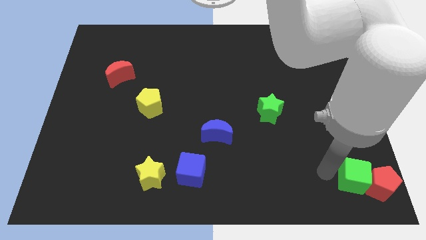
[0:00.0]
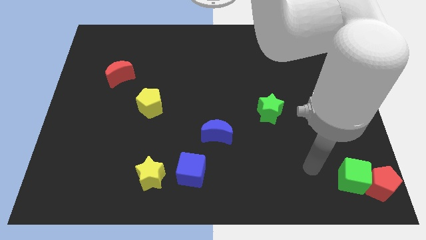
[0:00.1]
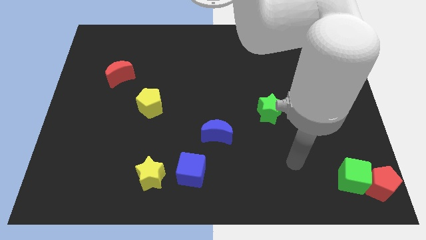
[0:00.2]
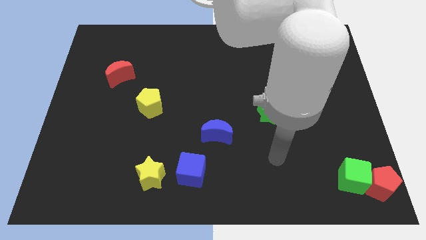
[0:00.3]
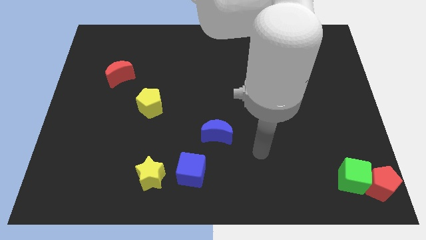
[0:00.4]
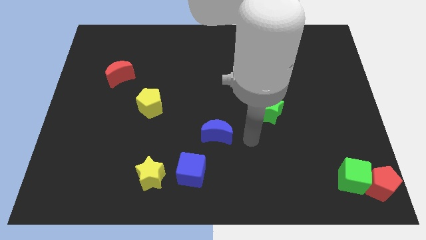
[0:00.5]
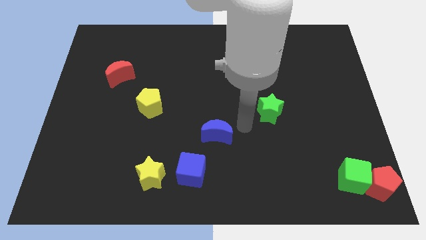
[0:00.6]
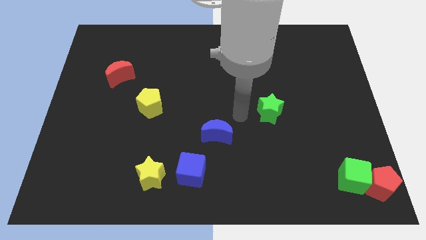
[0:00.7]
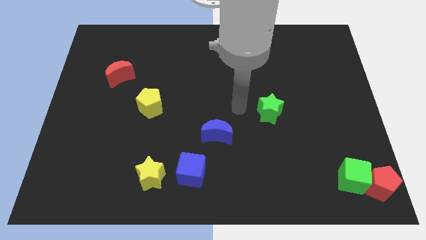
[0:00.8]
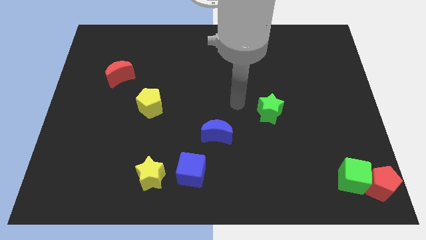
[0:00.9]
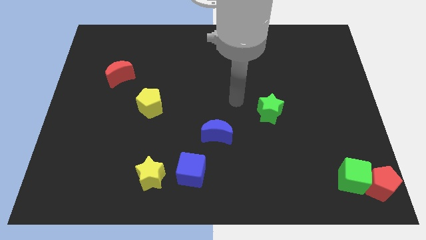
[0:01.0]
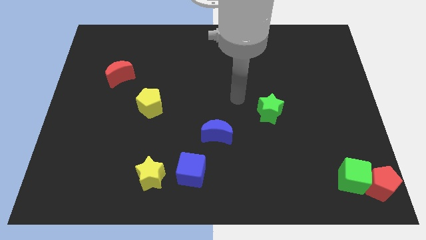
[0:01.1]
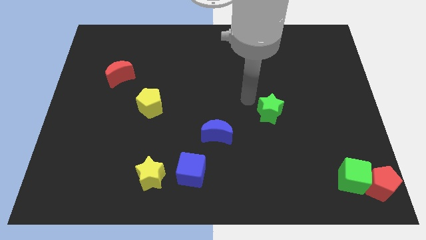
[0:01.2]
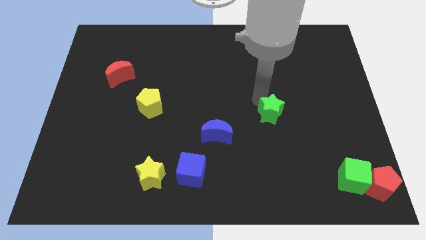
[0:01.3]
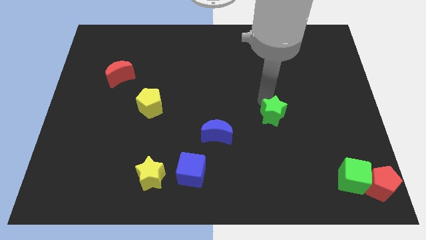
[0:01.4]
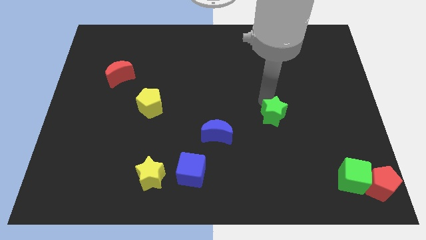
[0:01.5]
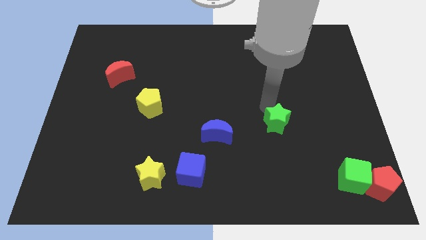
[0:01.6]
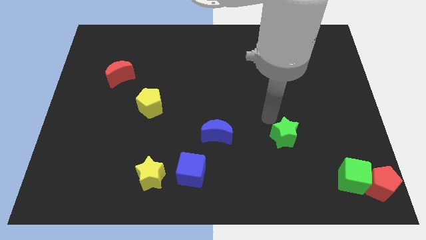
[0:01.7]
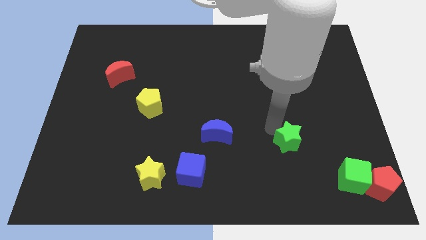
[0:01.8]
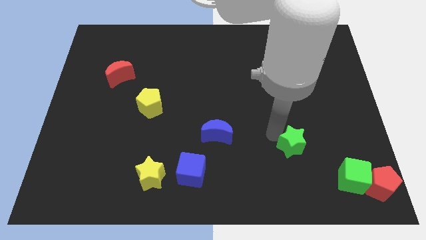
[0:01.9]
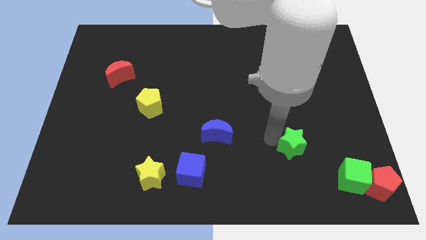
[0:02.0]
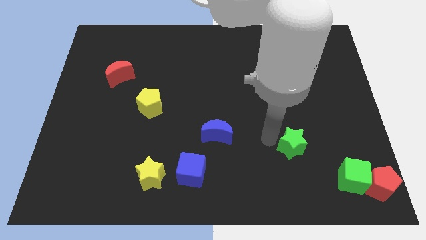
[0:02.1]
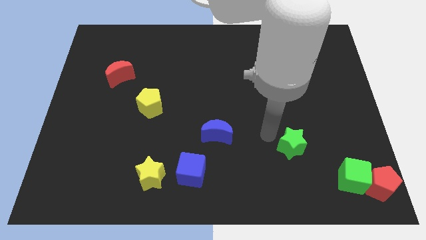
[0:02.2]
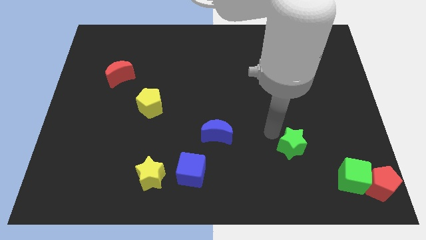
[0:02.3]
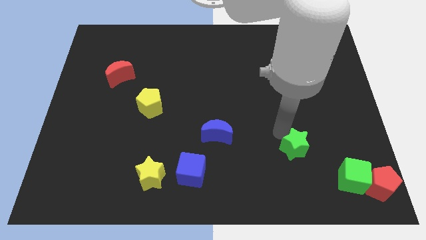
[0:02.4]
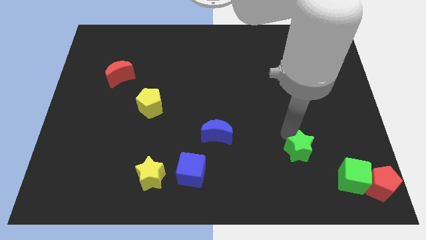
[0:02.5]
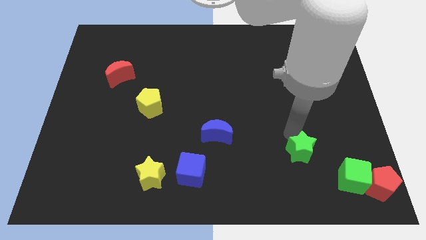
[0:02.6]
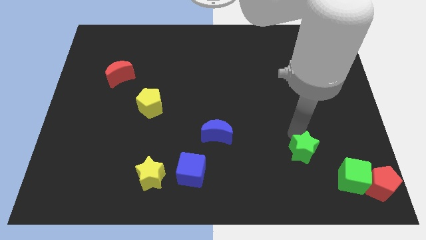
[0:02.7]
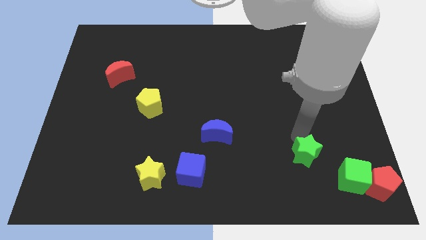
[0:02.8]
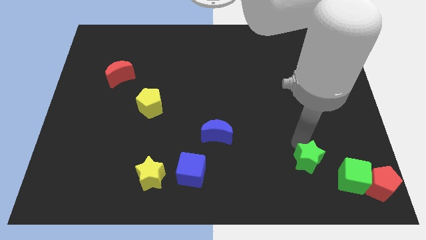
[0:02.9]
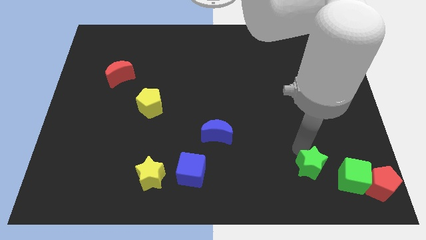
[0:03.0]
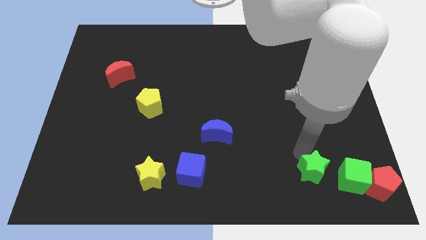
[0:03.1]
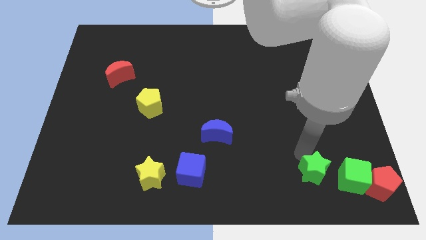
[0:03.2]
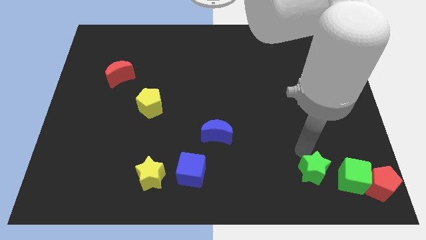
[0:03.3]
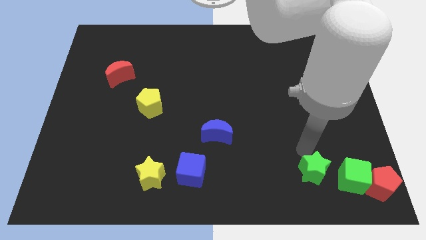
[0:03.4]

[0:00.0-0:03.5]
place the green star beside green cube

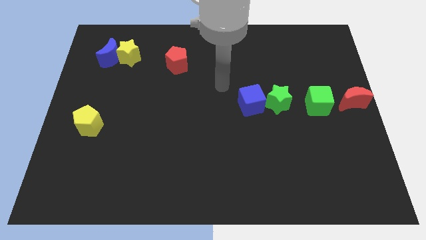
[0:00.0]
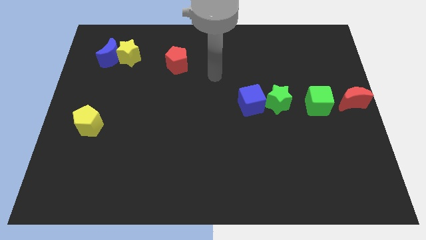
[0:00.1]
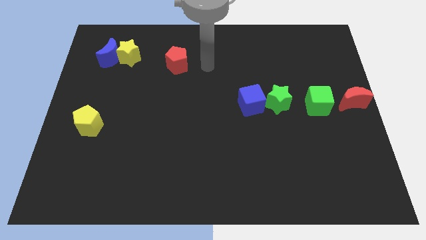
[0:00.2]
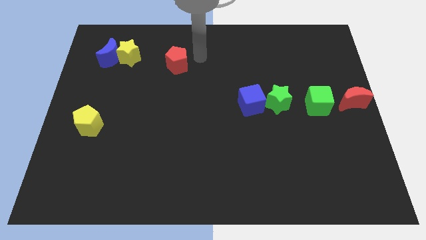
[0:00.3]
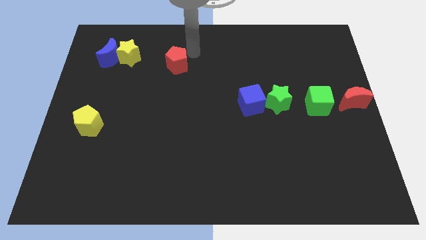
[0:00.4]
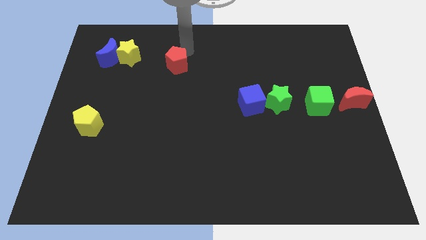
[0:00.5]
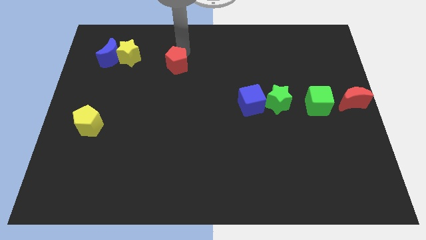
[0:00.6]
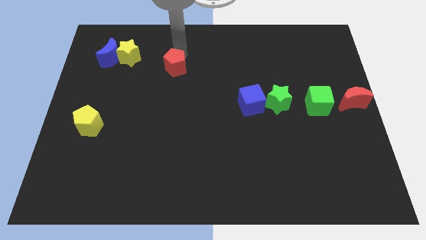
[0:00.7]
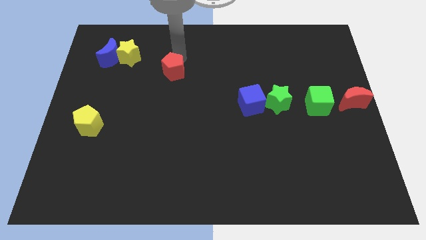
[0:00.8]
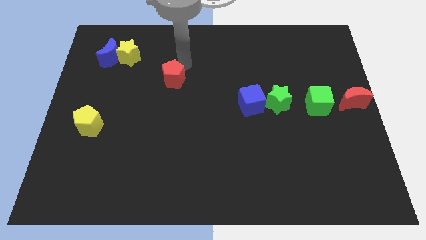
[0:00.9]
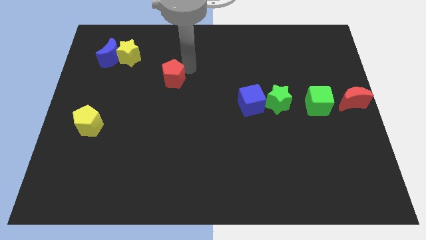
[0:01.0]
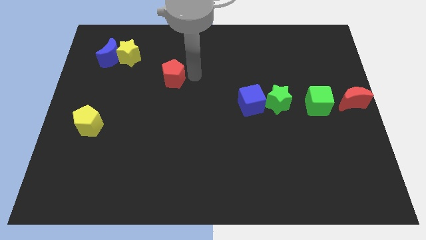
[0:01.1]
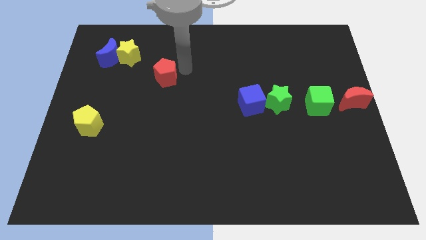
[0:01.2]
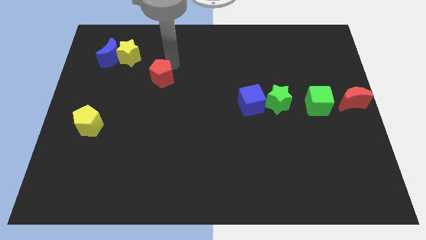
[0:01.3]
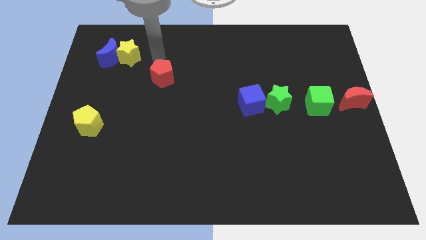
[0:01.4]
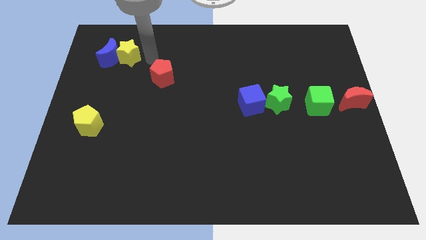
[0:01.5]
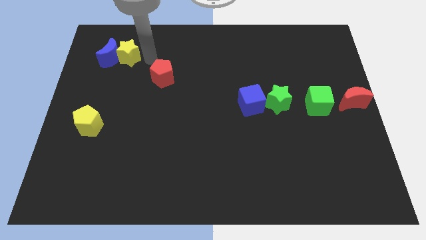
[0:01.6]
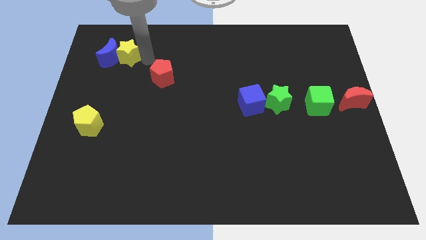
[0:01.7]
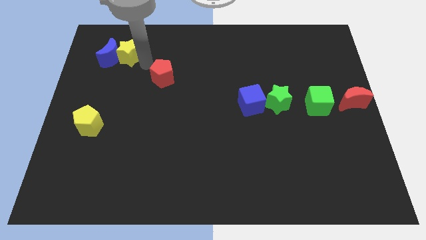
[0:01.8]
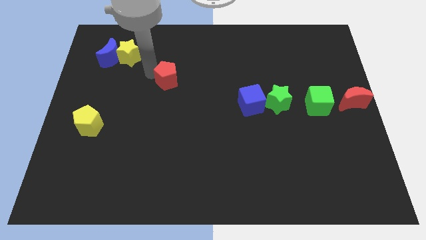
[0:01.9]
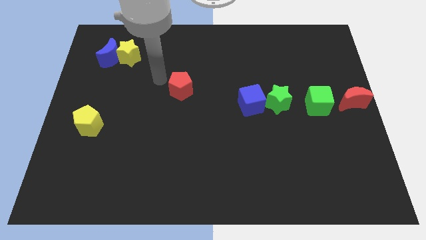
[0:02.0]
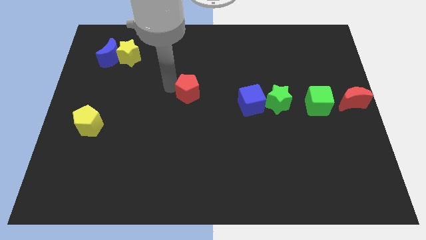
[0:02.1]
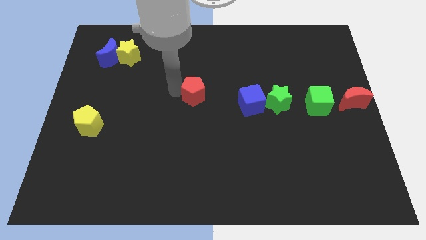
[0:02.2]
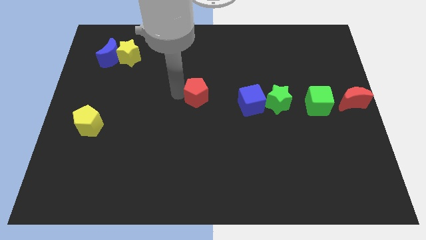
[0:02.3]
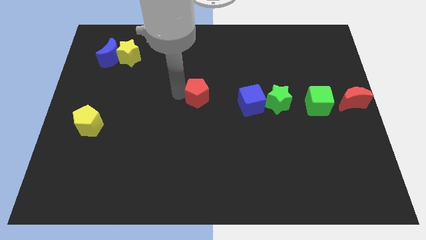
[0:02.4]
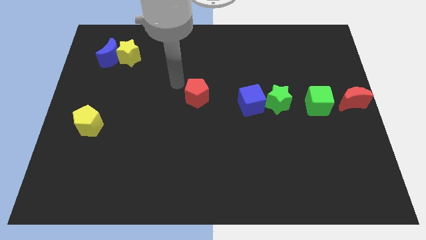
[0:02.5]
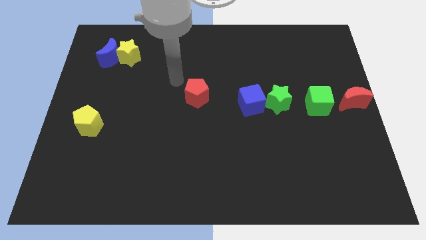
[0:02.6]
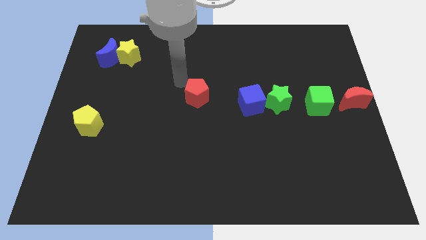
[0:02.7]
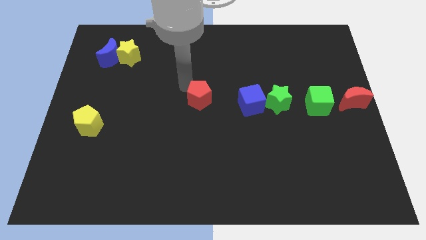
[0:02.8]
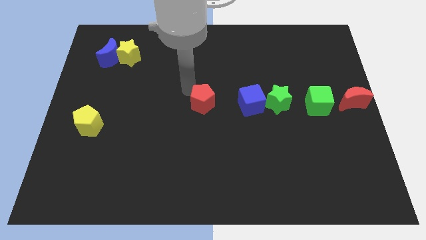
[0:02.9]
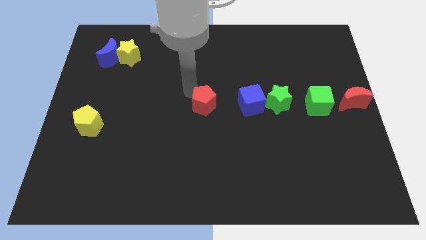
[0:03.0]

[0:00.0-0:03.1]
move the red pentagon towards the center

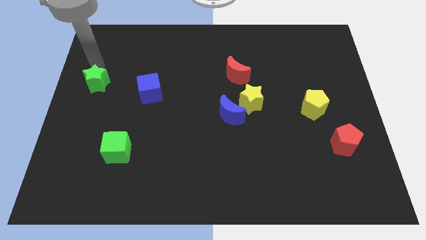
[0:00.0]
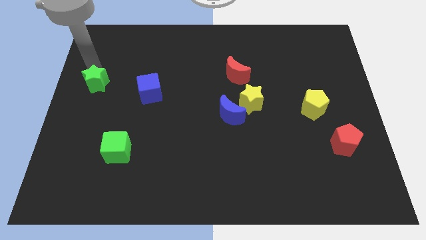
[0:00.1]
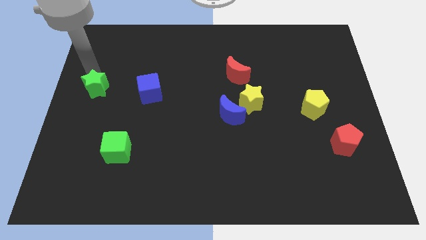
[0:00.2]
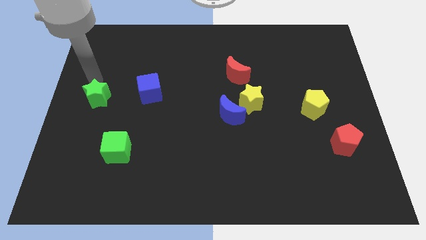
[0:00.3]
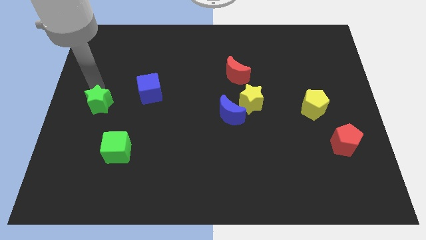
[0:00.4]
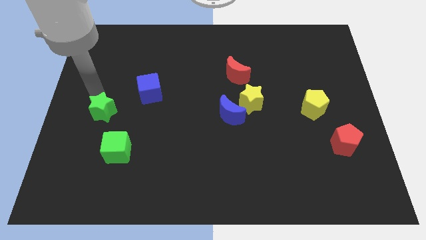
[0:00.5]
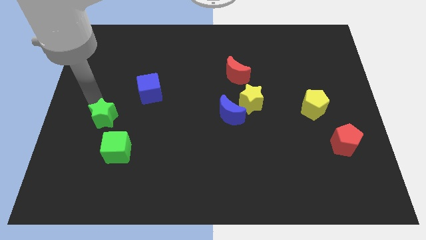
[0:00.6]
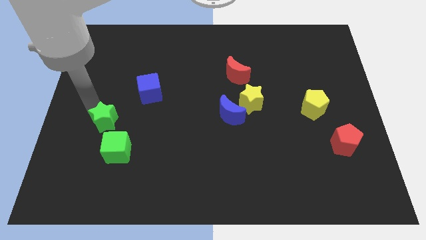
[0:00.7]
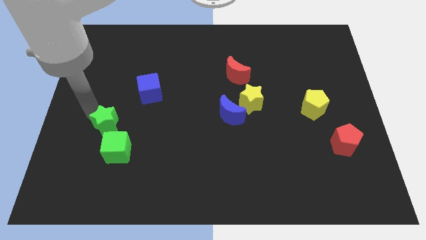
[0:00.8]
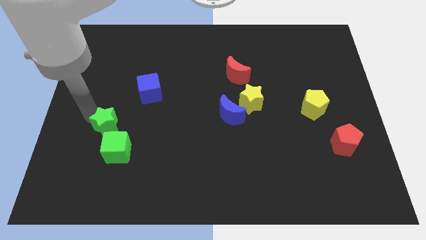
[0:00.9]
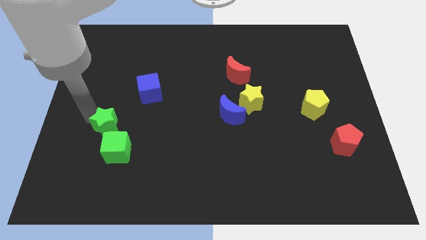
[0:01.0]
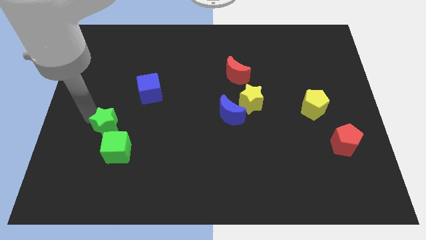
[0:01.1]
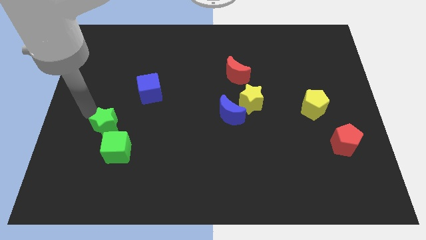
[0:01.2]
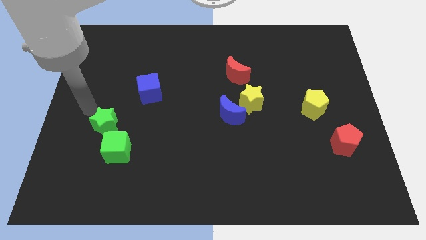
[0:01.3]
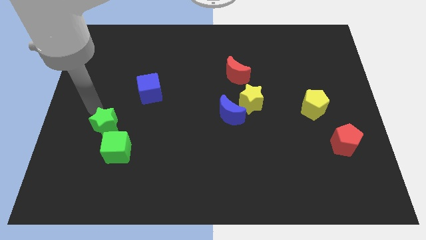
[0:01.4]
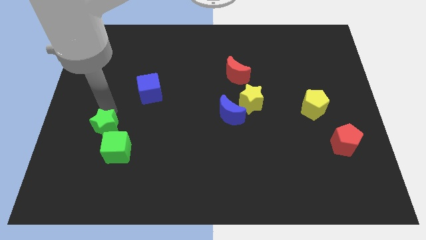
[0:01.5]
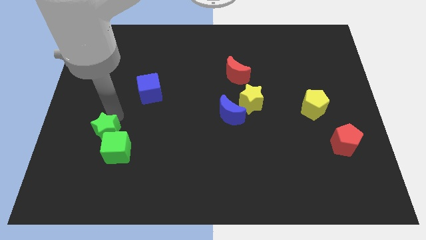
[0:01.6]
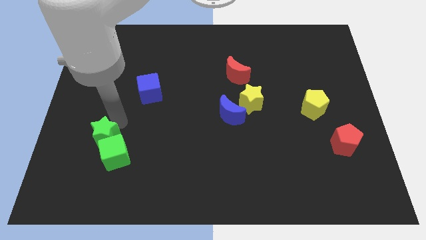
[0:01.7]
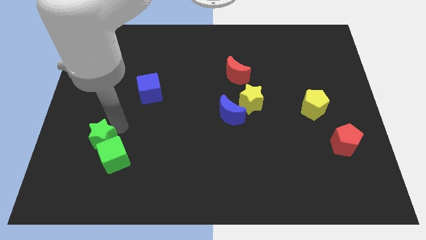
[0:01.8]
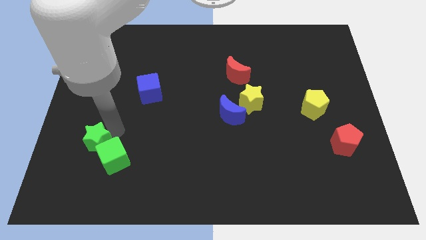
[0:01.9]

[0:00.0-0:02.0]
move the green star into the green cube

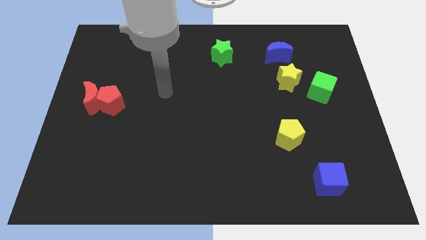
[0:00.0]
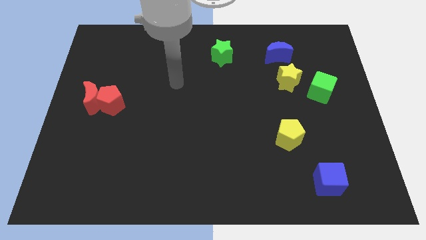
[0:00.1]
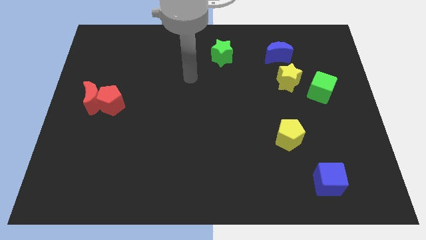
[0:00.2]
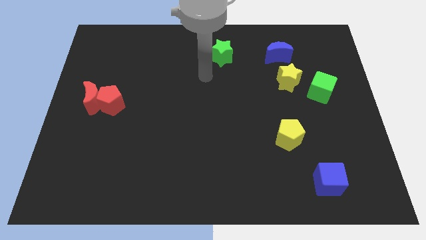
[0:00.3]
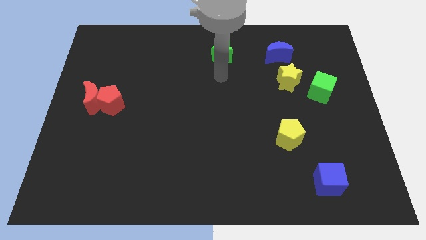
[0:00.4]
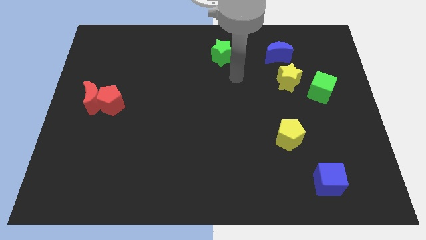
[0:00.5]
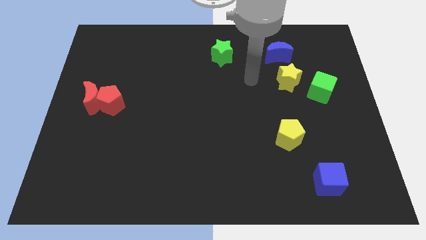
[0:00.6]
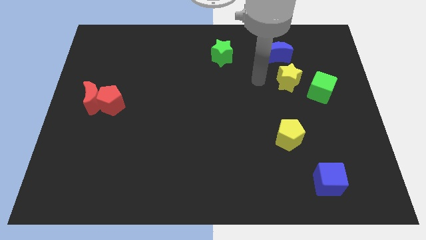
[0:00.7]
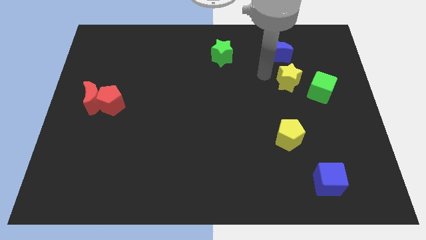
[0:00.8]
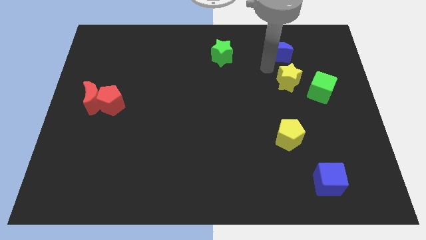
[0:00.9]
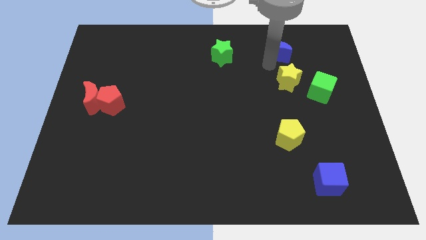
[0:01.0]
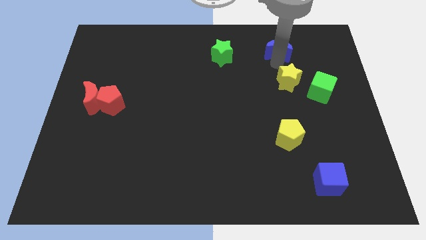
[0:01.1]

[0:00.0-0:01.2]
tap the blue crescent
